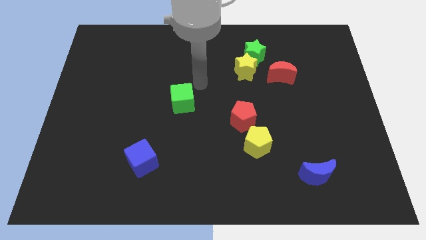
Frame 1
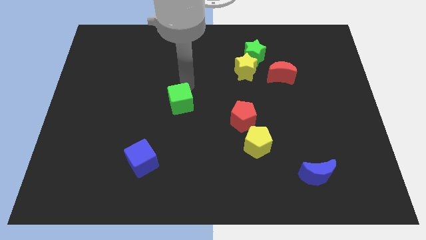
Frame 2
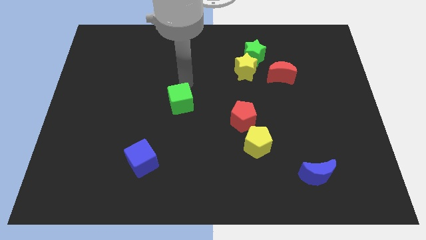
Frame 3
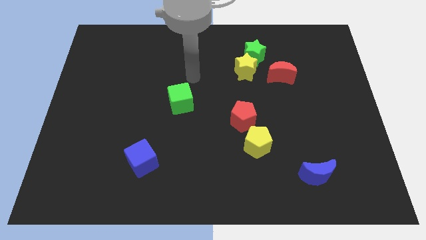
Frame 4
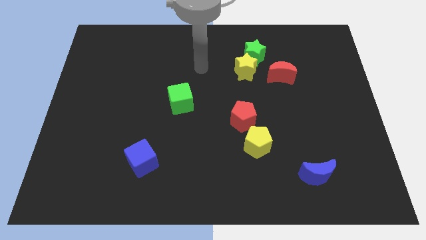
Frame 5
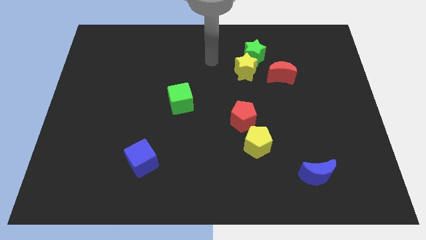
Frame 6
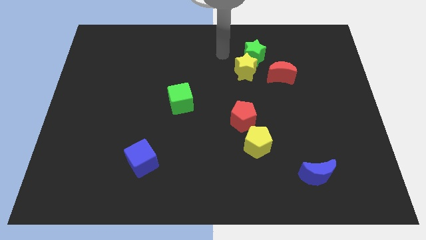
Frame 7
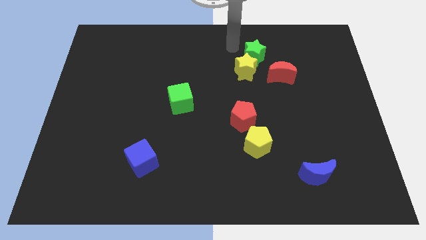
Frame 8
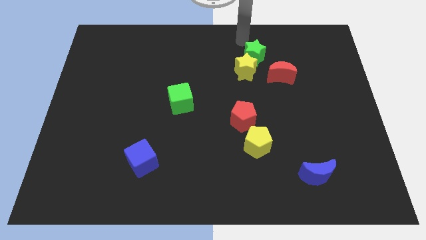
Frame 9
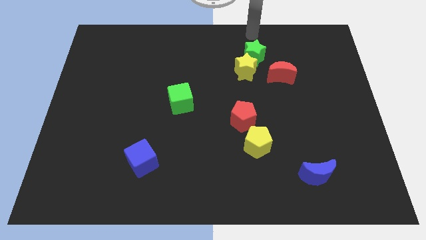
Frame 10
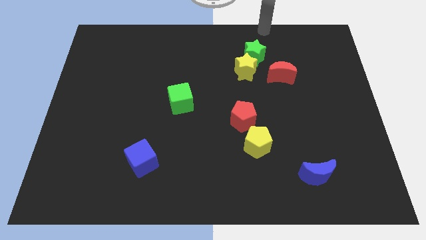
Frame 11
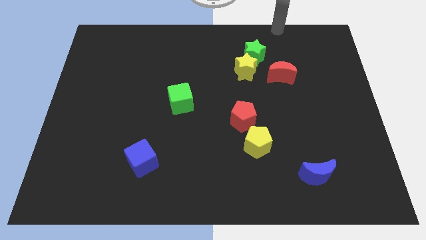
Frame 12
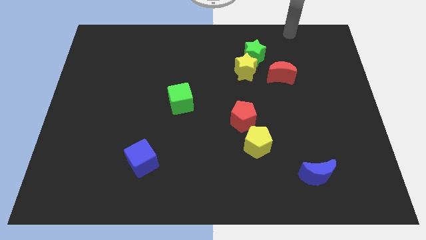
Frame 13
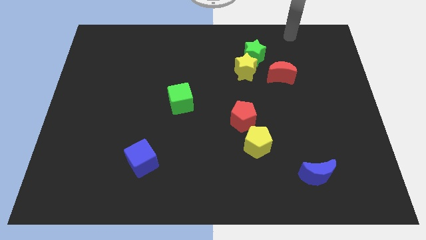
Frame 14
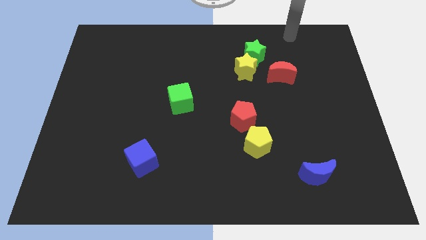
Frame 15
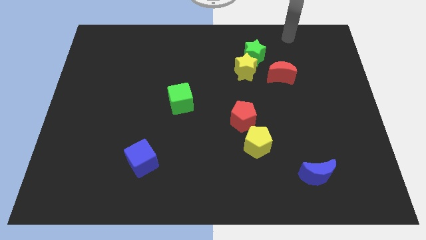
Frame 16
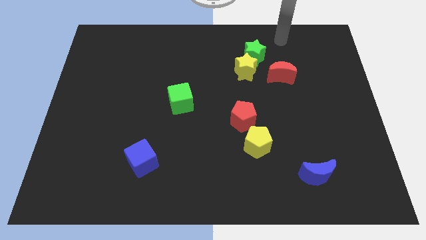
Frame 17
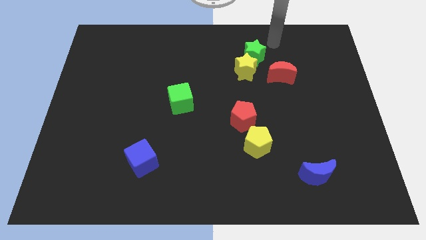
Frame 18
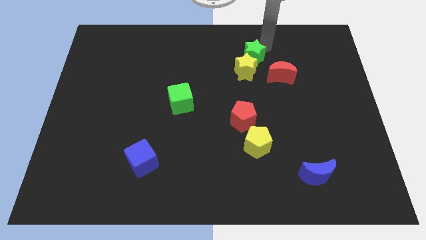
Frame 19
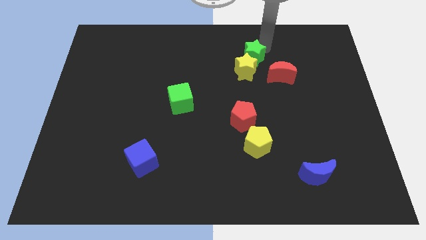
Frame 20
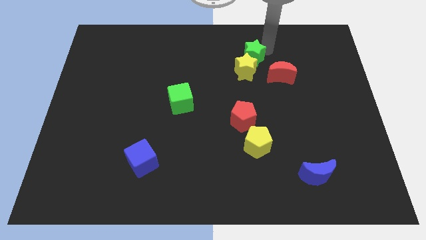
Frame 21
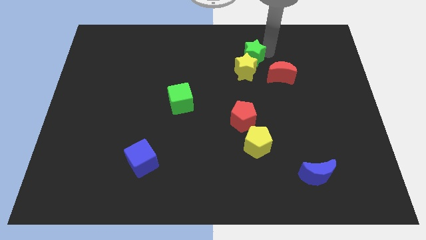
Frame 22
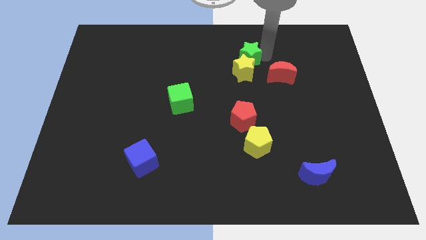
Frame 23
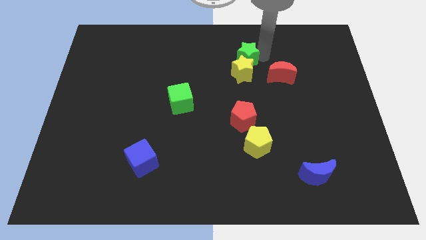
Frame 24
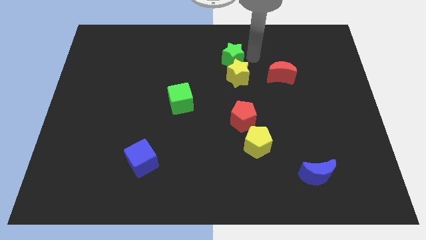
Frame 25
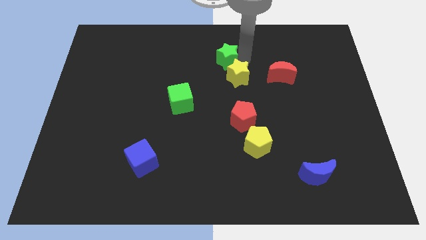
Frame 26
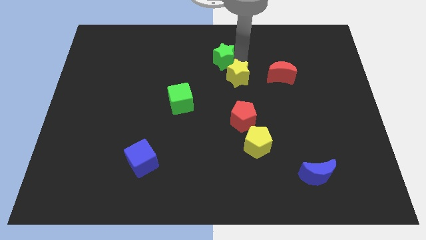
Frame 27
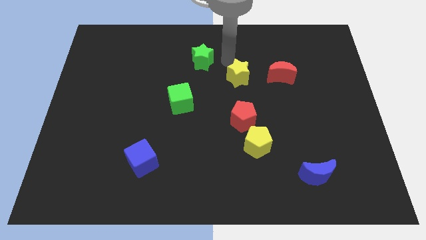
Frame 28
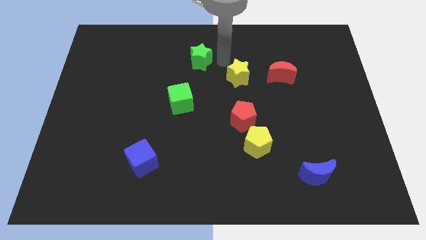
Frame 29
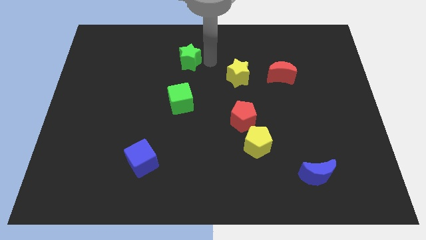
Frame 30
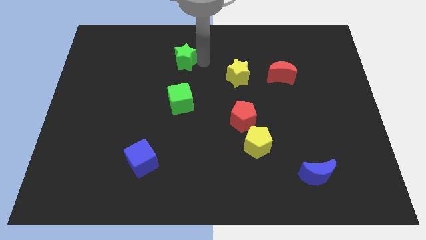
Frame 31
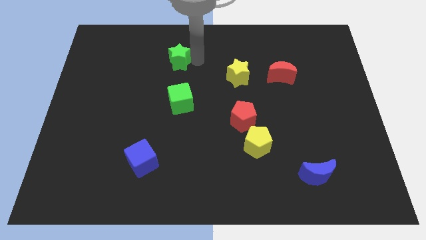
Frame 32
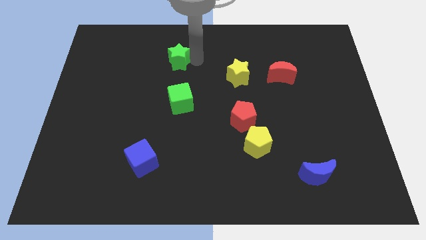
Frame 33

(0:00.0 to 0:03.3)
place the green star vertically above the green cube

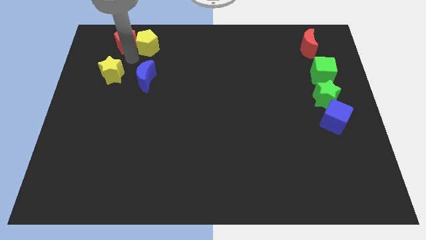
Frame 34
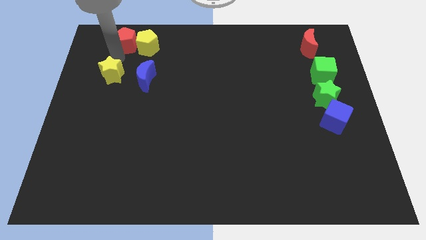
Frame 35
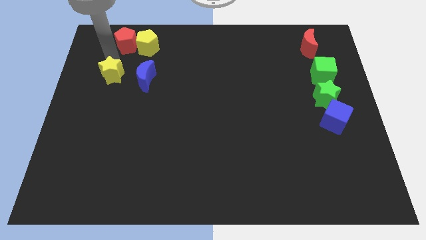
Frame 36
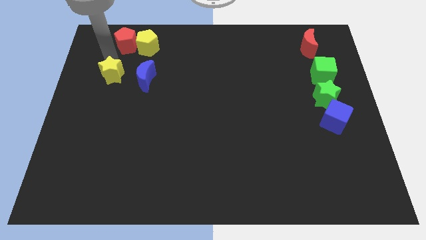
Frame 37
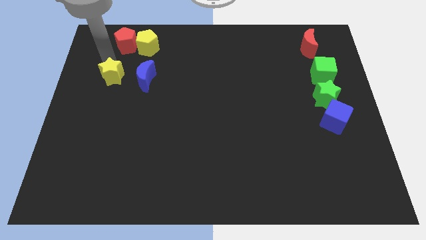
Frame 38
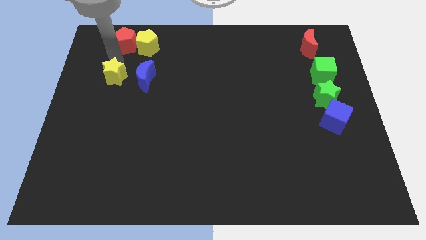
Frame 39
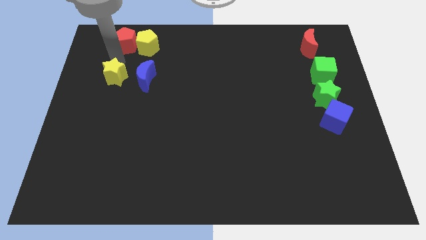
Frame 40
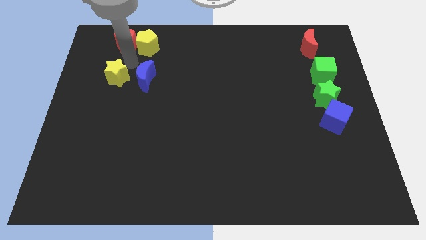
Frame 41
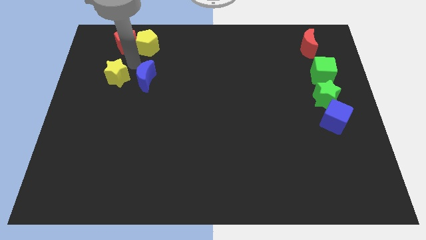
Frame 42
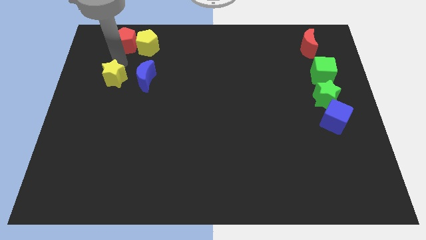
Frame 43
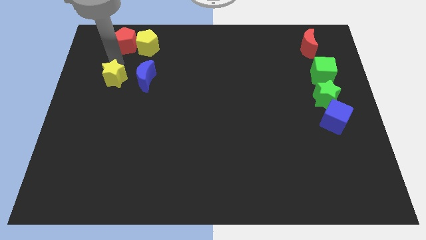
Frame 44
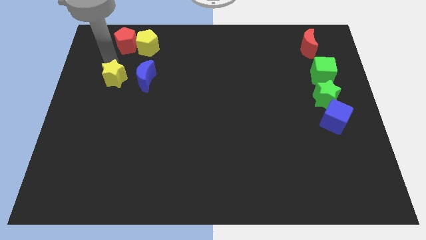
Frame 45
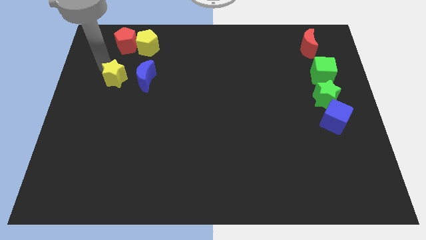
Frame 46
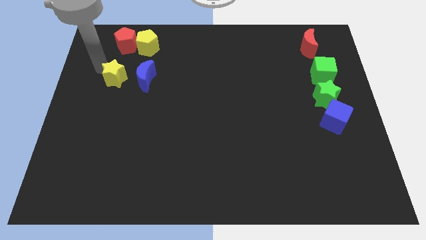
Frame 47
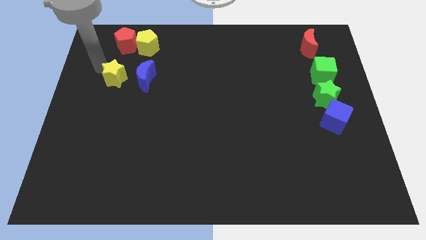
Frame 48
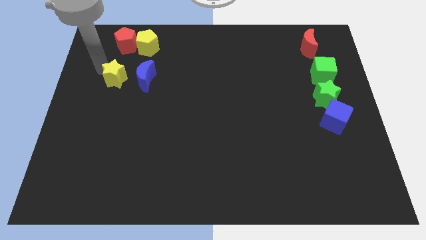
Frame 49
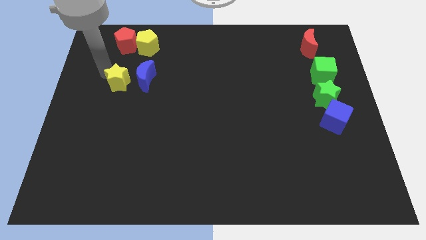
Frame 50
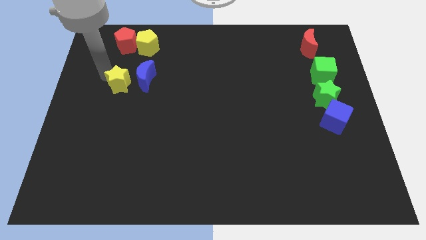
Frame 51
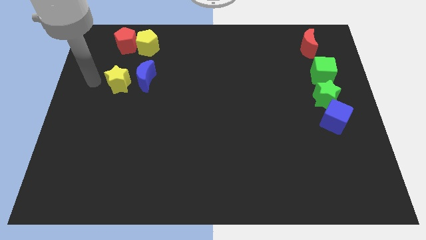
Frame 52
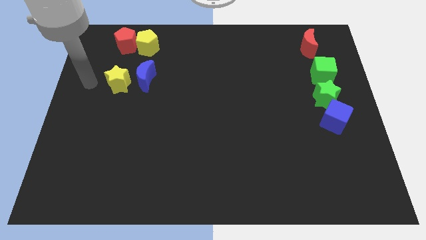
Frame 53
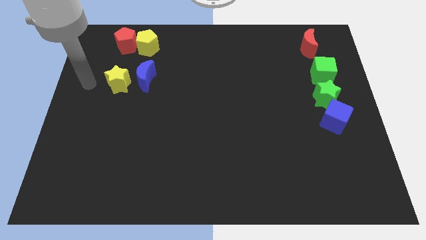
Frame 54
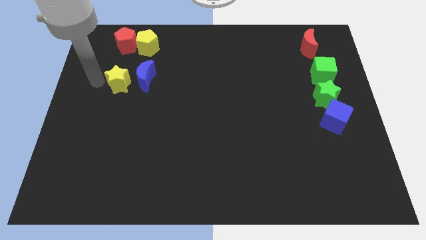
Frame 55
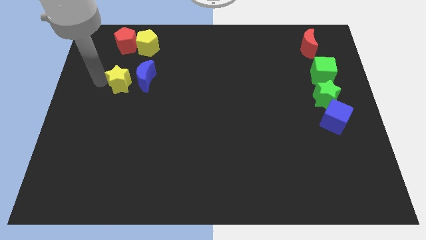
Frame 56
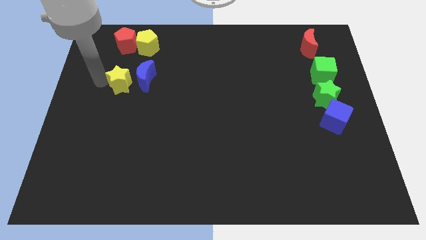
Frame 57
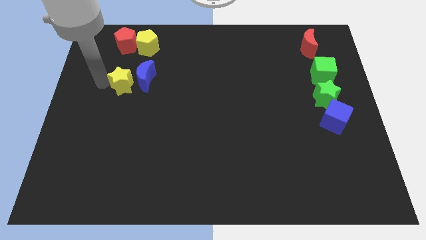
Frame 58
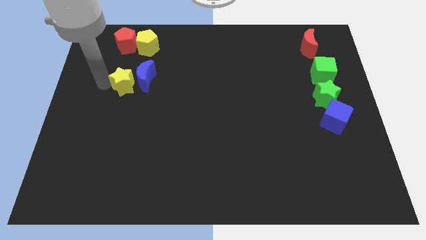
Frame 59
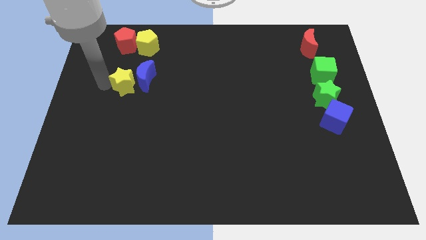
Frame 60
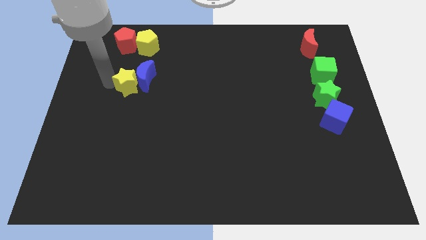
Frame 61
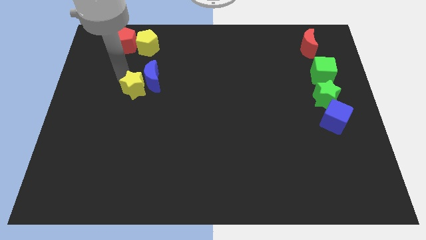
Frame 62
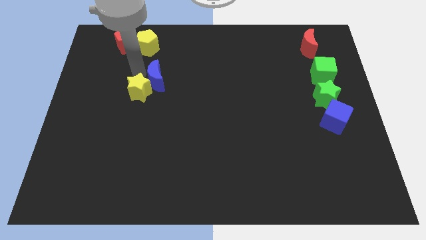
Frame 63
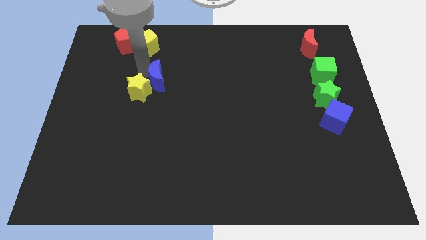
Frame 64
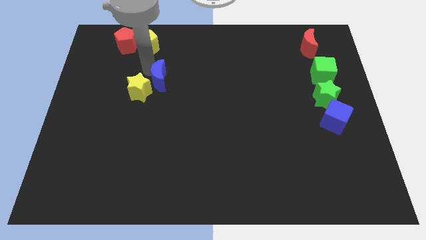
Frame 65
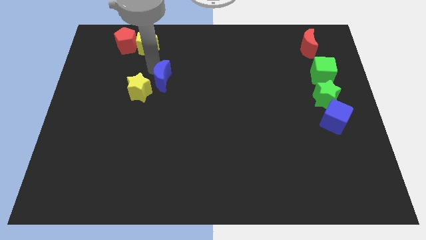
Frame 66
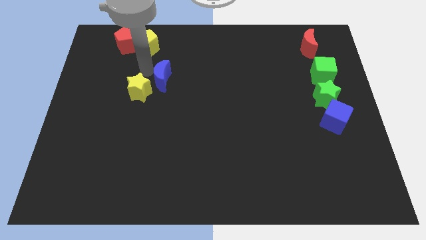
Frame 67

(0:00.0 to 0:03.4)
place yellow star vertically to the bottom of the yellow pentagon

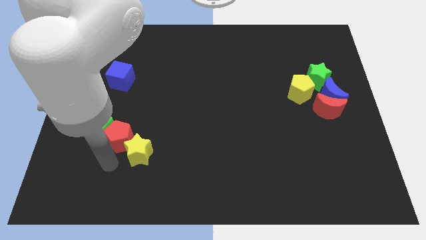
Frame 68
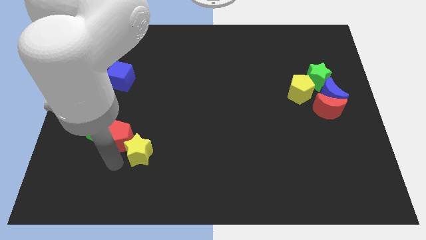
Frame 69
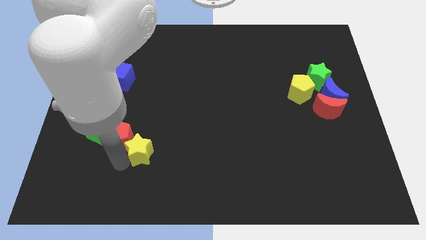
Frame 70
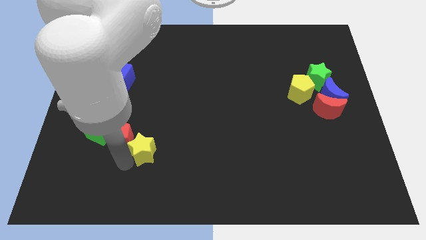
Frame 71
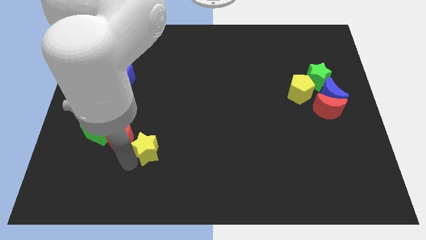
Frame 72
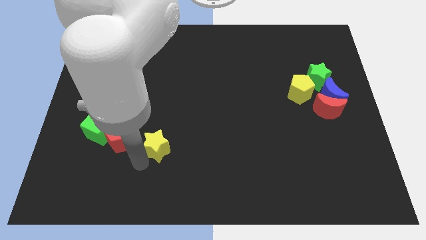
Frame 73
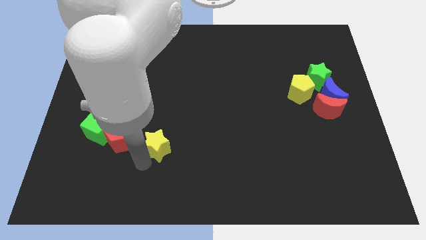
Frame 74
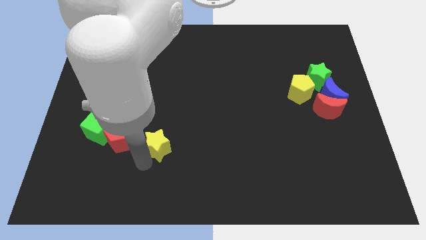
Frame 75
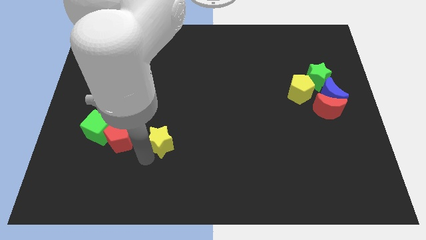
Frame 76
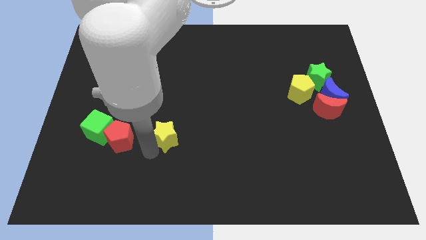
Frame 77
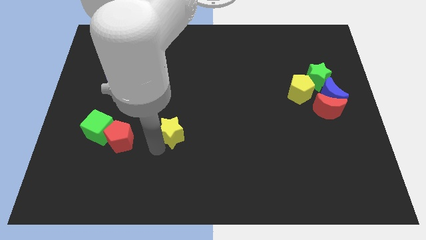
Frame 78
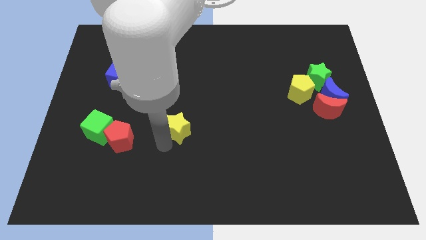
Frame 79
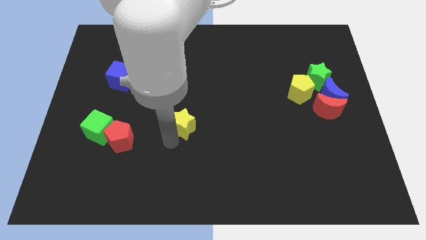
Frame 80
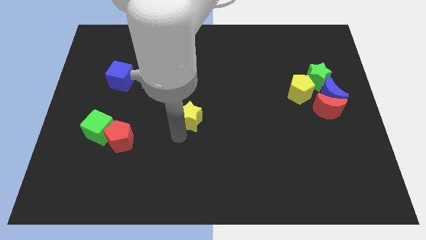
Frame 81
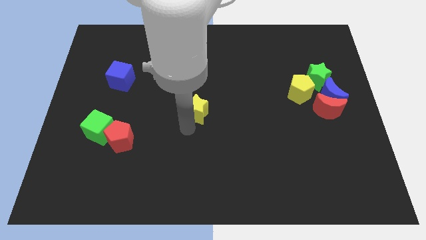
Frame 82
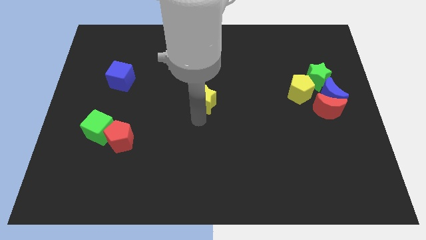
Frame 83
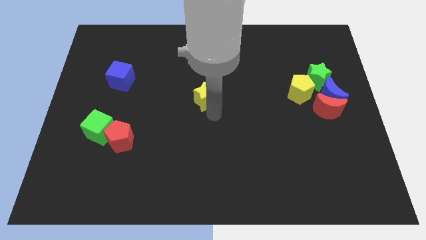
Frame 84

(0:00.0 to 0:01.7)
separate the yellow star from red pentagon

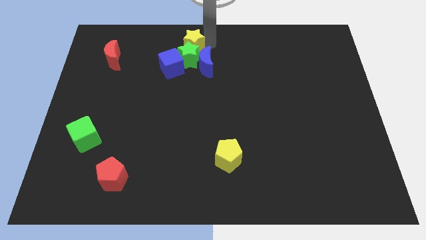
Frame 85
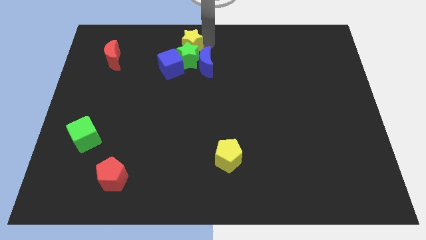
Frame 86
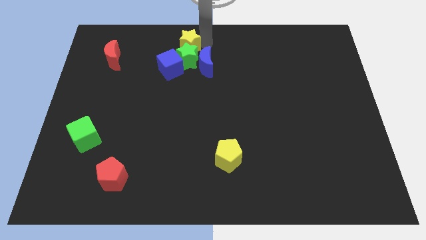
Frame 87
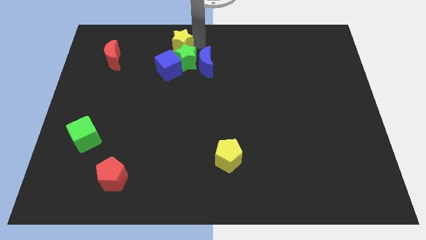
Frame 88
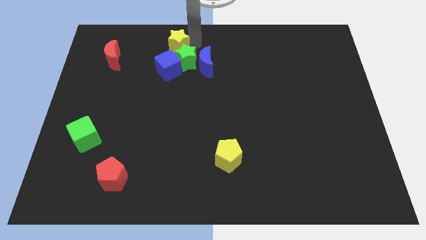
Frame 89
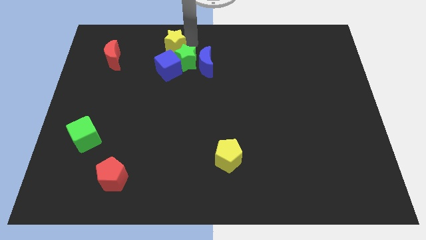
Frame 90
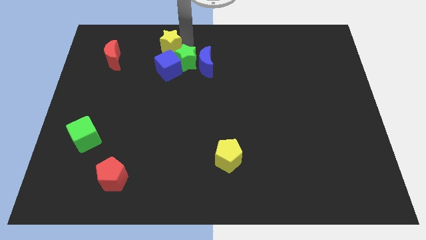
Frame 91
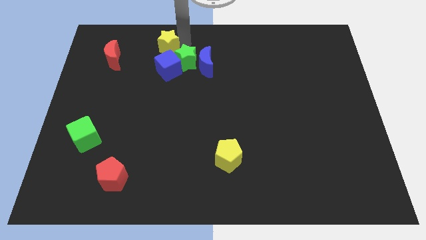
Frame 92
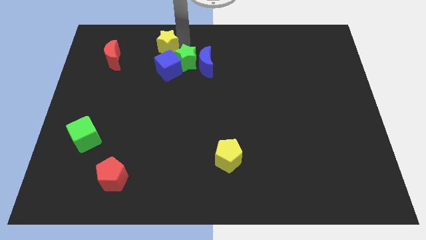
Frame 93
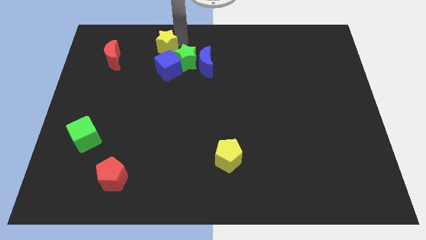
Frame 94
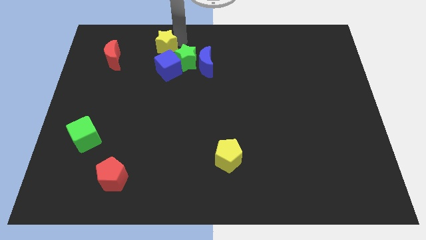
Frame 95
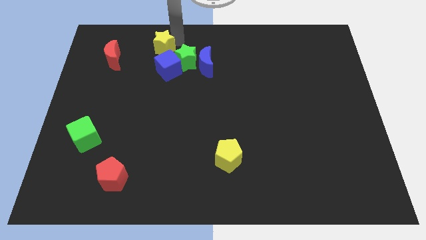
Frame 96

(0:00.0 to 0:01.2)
move the yellow star above the blue cube
